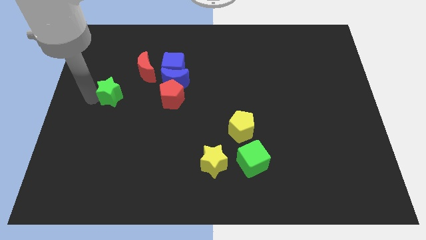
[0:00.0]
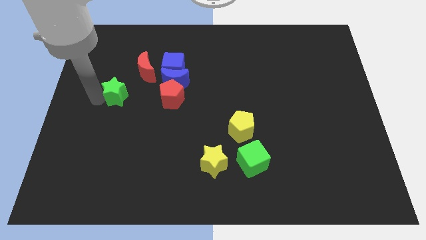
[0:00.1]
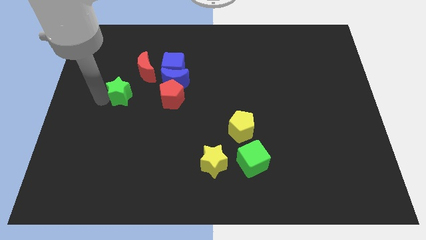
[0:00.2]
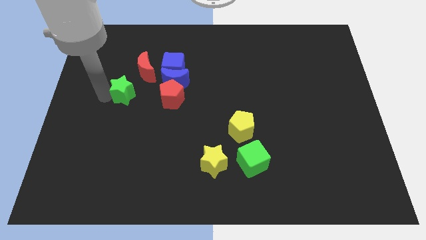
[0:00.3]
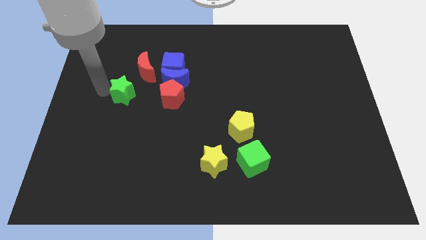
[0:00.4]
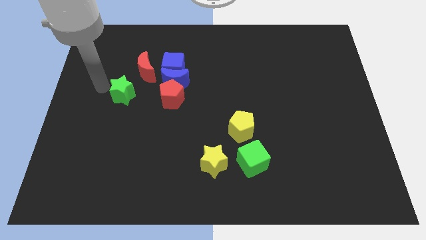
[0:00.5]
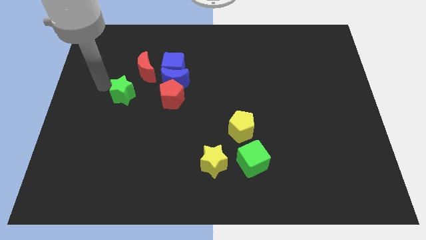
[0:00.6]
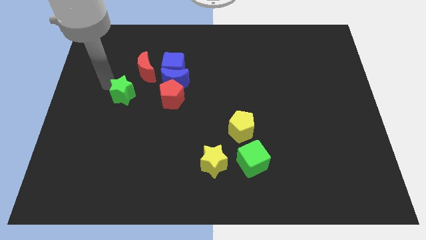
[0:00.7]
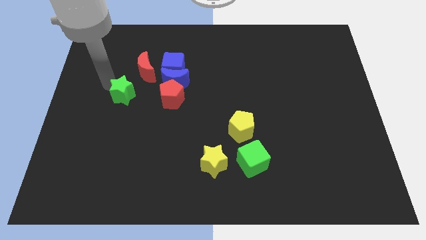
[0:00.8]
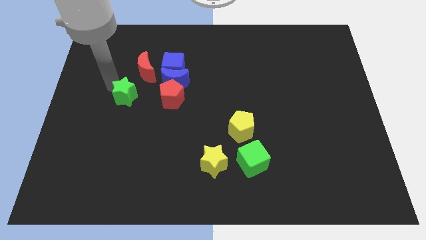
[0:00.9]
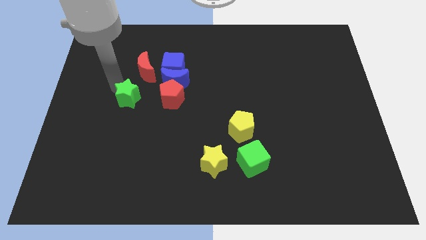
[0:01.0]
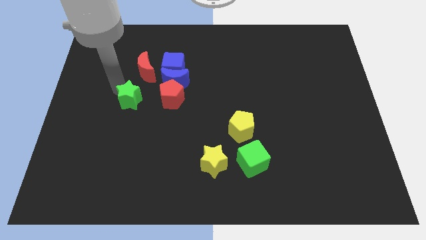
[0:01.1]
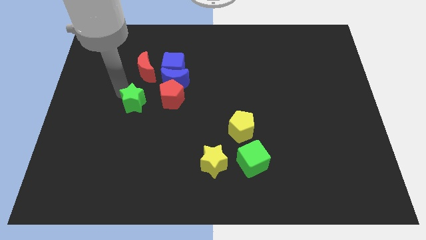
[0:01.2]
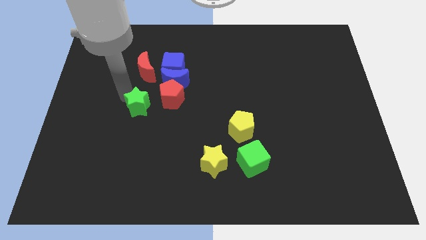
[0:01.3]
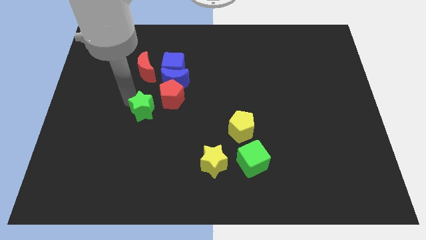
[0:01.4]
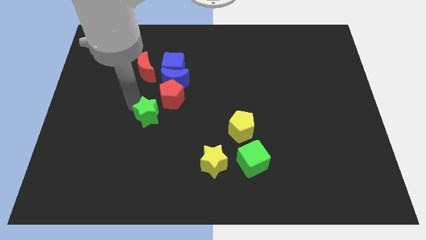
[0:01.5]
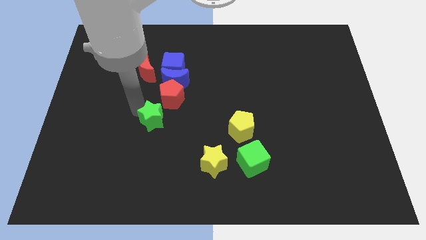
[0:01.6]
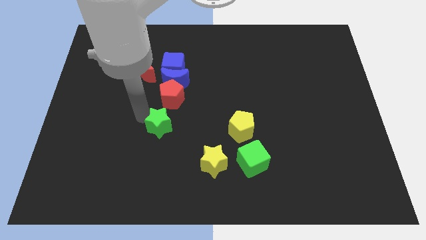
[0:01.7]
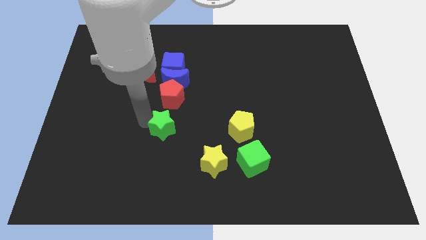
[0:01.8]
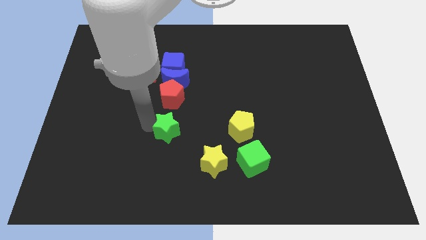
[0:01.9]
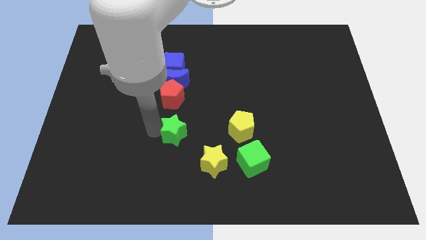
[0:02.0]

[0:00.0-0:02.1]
move the green star to the bottom of the red pentagon

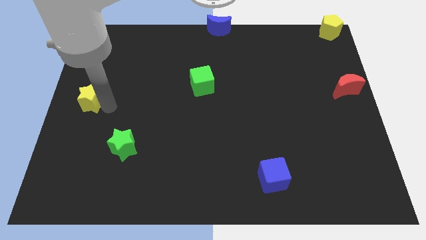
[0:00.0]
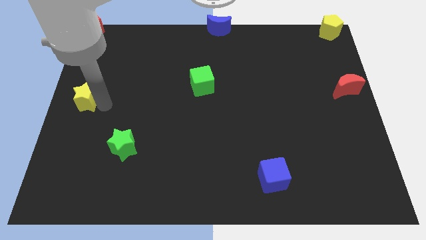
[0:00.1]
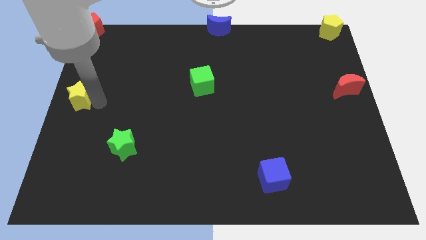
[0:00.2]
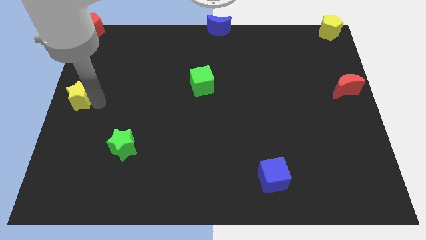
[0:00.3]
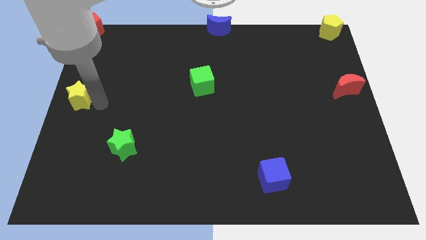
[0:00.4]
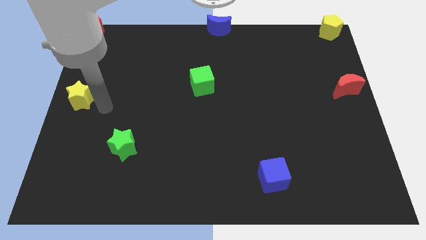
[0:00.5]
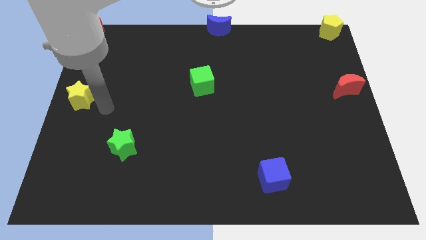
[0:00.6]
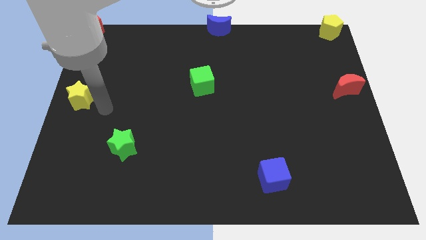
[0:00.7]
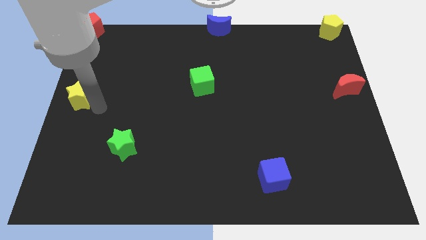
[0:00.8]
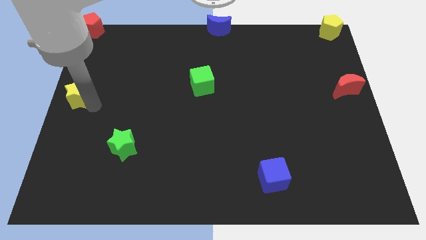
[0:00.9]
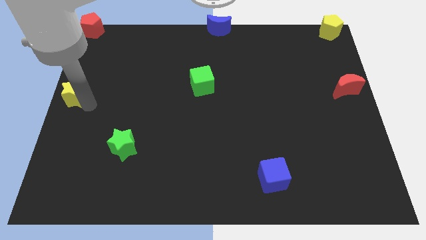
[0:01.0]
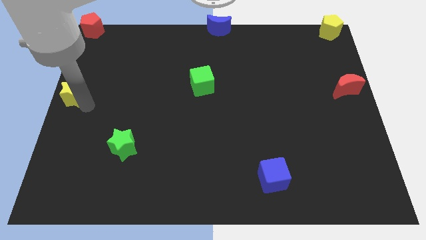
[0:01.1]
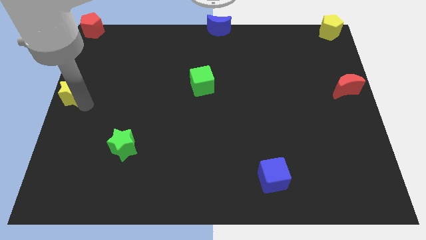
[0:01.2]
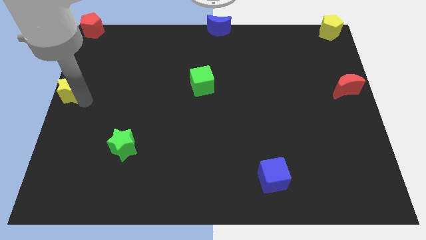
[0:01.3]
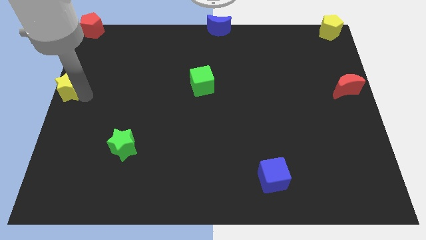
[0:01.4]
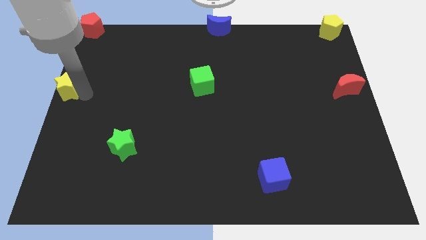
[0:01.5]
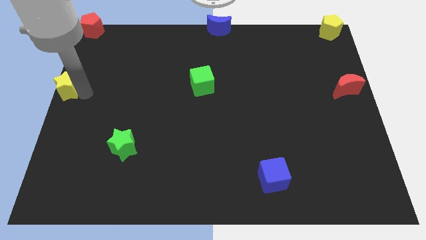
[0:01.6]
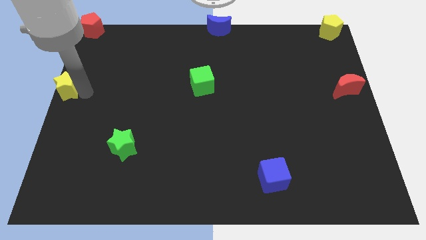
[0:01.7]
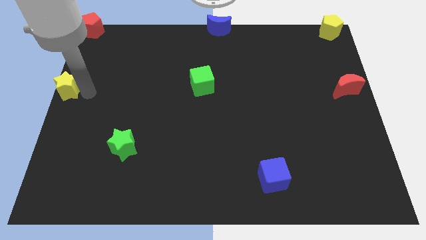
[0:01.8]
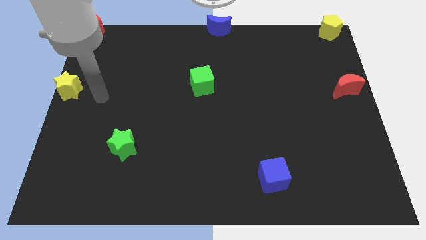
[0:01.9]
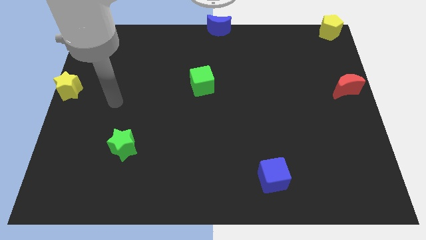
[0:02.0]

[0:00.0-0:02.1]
place the yellow star to the left center of board

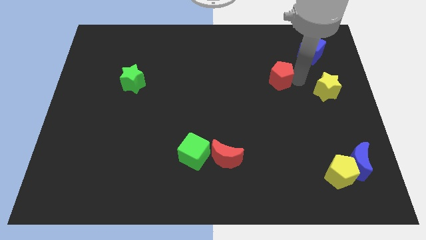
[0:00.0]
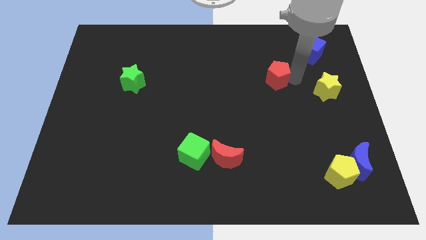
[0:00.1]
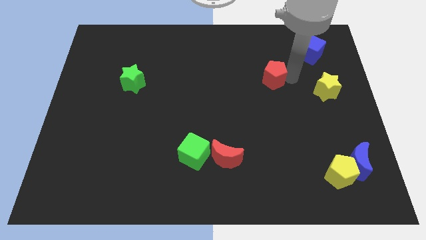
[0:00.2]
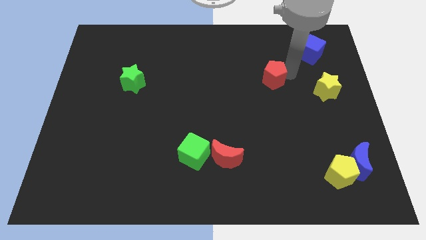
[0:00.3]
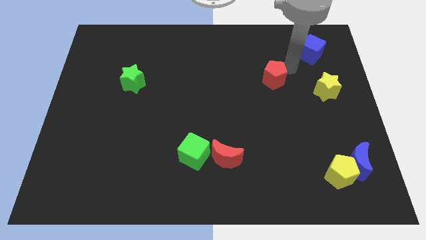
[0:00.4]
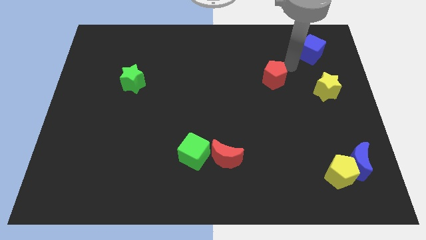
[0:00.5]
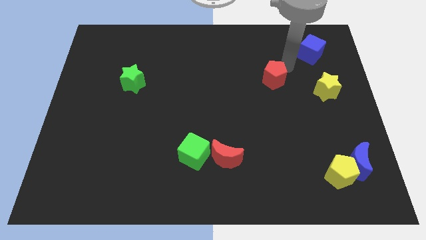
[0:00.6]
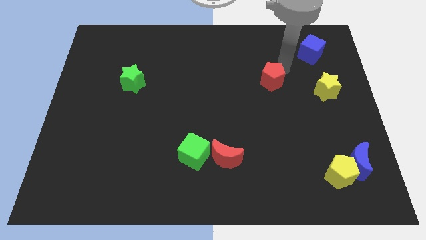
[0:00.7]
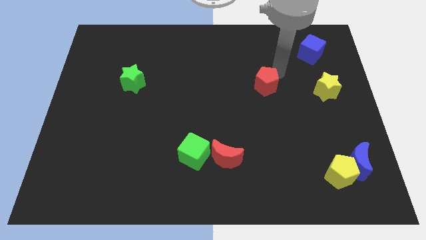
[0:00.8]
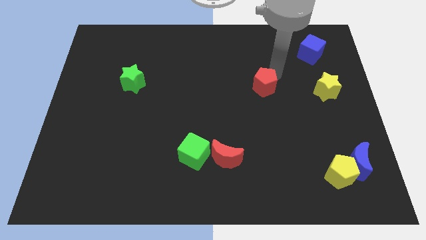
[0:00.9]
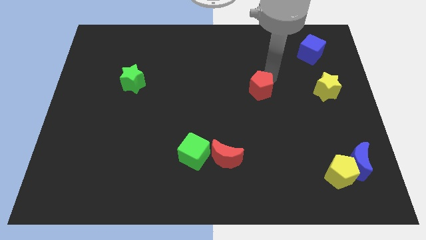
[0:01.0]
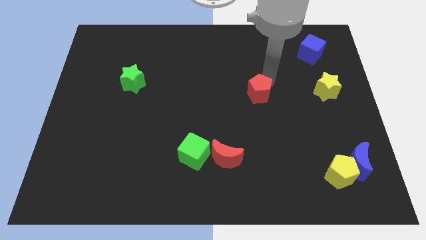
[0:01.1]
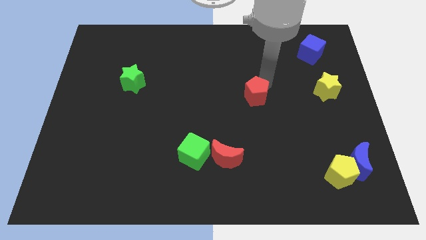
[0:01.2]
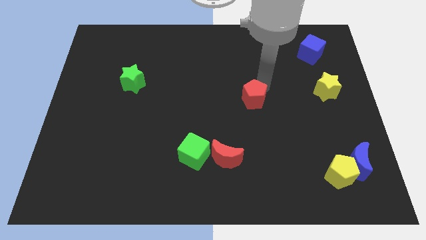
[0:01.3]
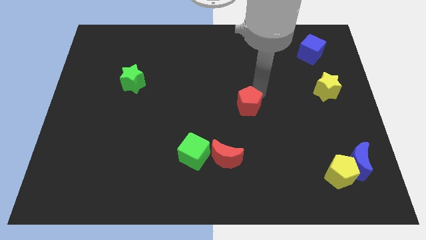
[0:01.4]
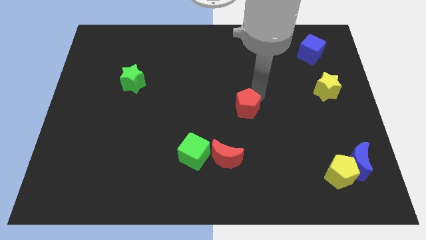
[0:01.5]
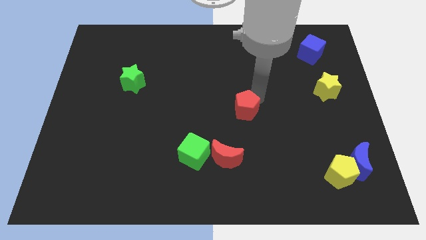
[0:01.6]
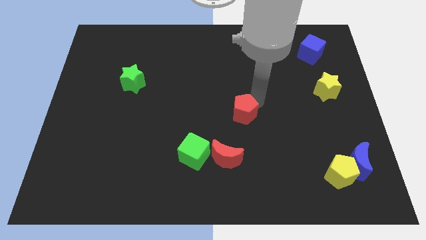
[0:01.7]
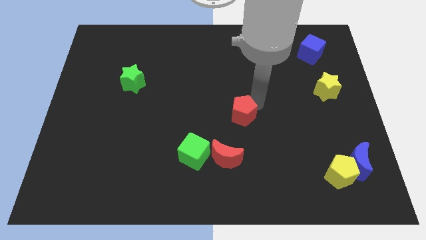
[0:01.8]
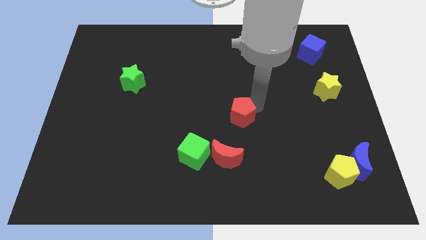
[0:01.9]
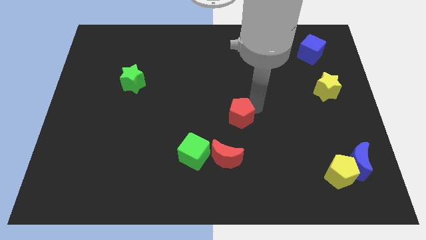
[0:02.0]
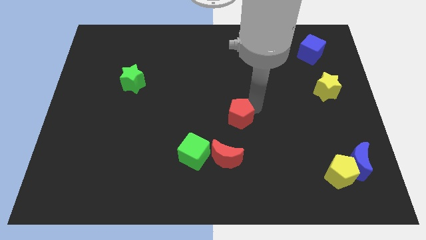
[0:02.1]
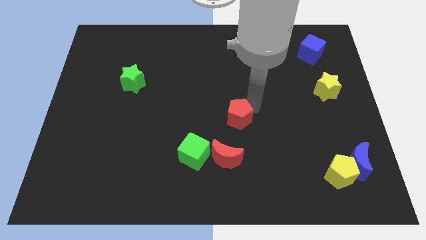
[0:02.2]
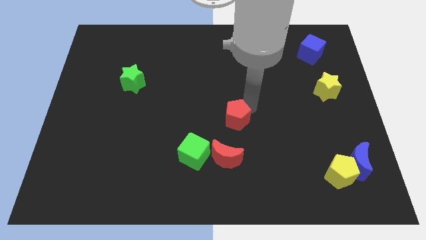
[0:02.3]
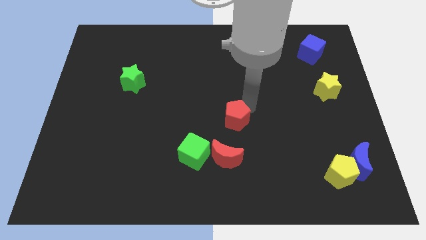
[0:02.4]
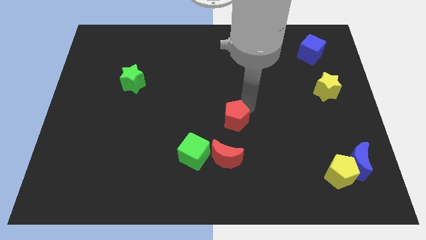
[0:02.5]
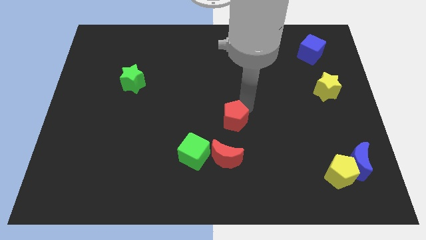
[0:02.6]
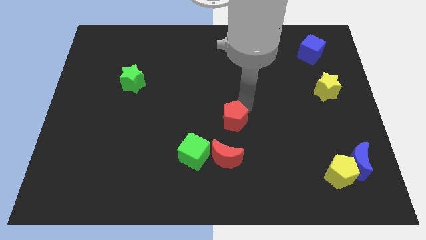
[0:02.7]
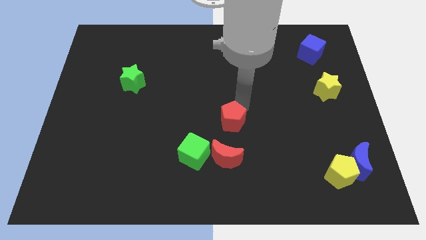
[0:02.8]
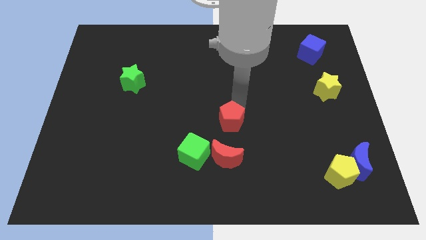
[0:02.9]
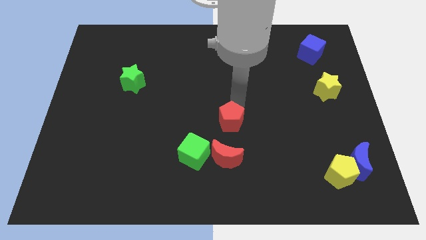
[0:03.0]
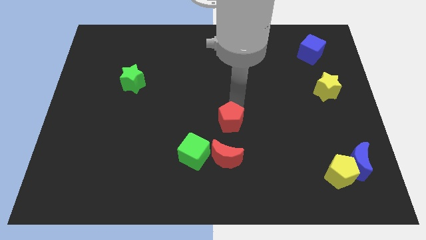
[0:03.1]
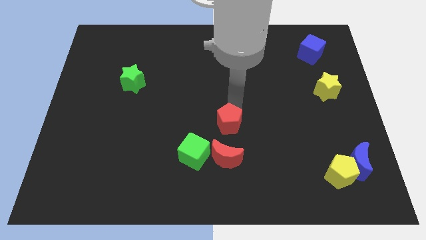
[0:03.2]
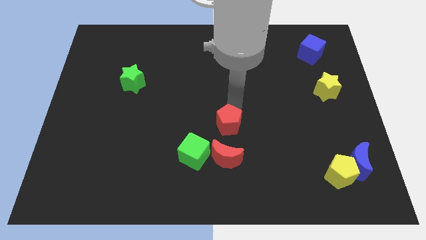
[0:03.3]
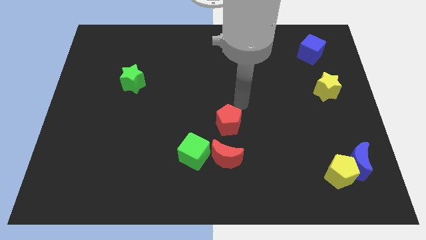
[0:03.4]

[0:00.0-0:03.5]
push the red pentagon to the top of the red crescent

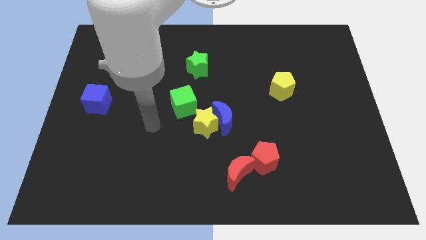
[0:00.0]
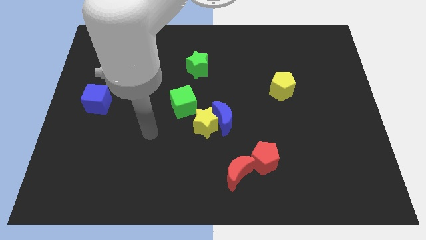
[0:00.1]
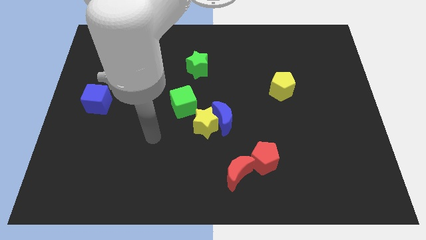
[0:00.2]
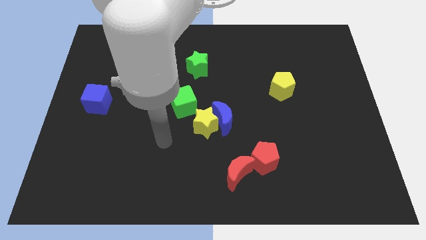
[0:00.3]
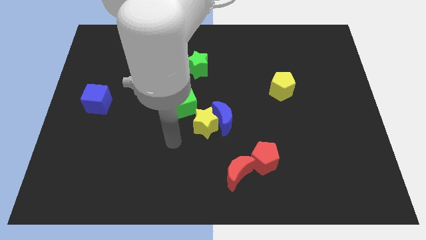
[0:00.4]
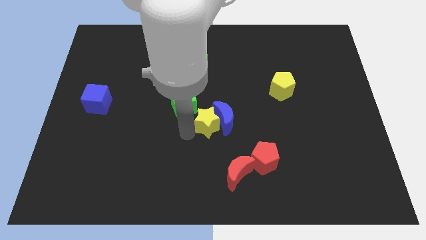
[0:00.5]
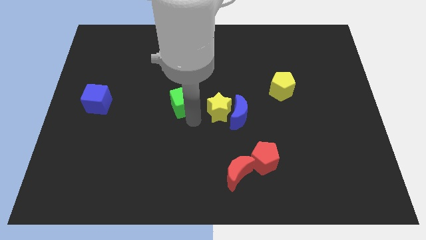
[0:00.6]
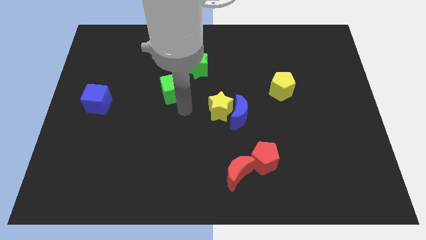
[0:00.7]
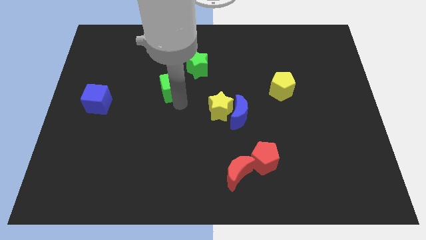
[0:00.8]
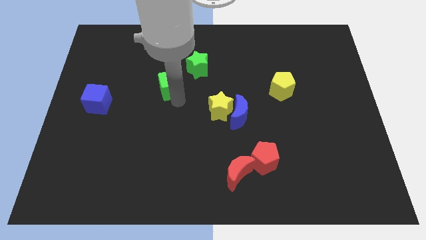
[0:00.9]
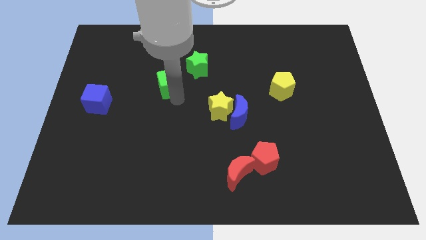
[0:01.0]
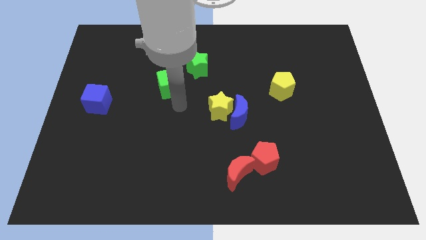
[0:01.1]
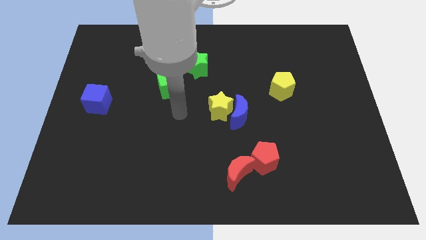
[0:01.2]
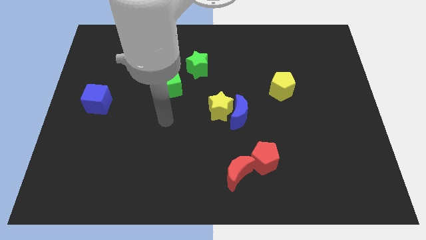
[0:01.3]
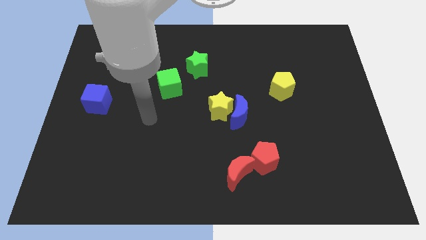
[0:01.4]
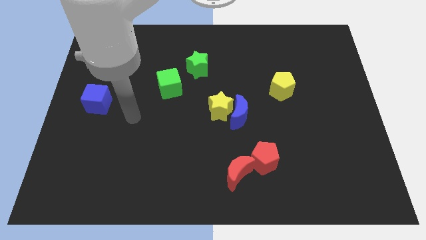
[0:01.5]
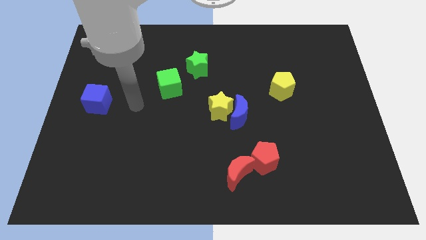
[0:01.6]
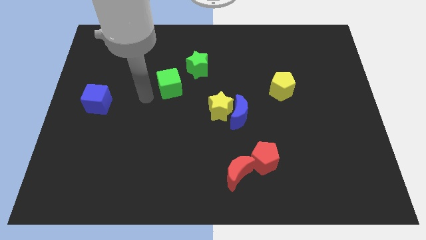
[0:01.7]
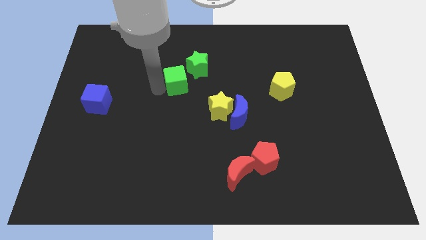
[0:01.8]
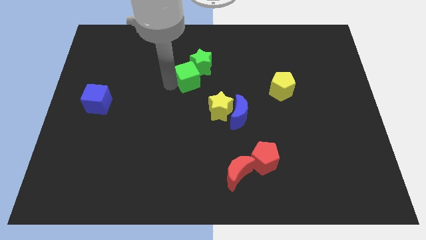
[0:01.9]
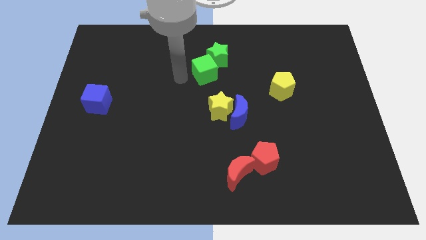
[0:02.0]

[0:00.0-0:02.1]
move green cube towards the green star
